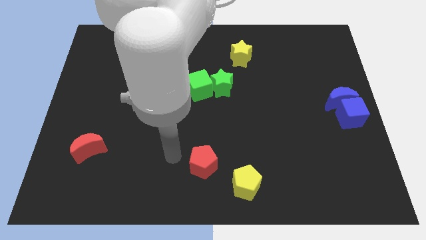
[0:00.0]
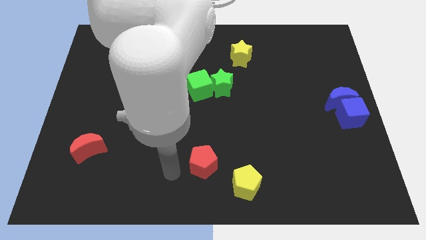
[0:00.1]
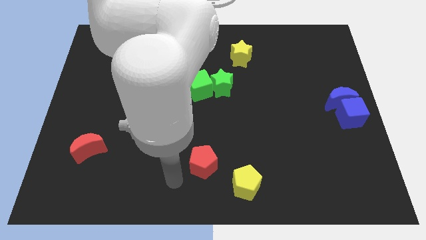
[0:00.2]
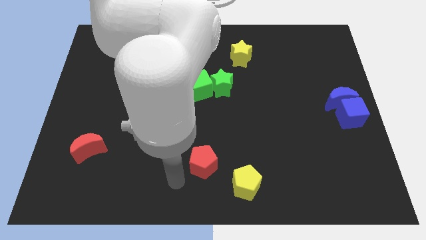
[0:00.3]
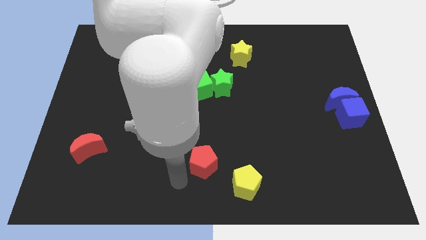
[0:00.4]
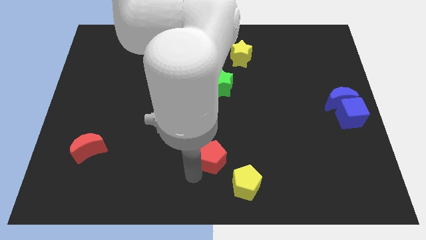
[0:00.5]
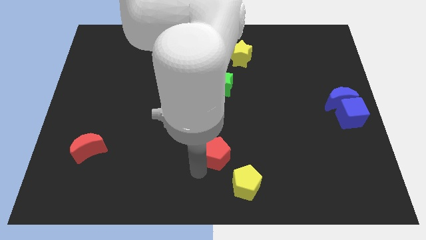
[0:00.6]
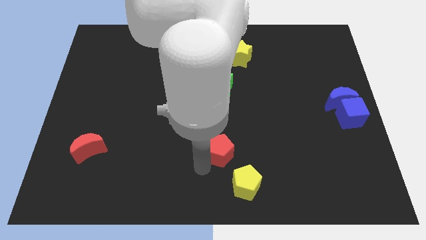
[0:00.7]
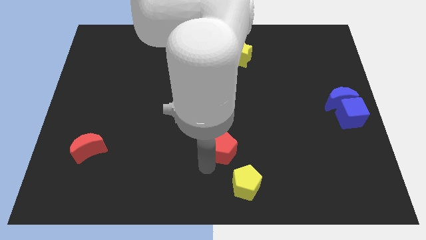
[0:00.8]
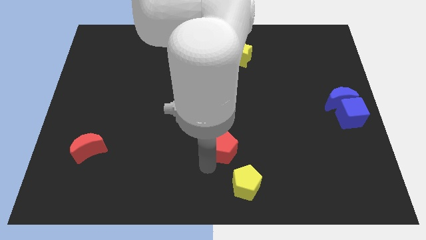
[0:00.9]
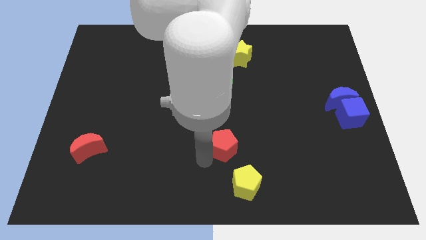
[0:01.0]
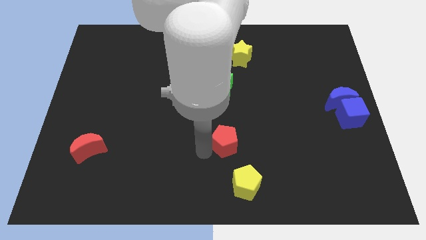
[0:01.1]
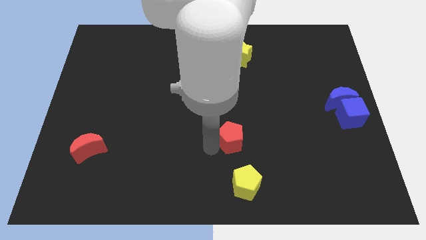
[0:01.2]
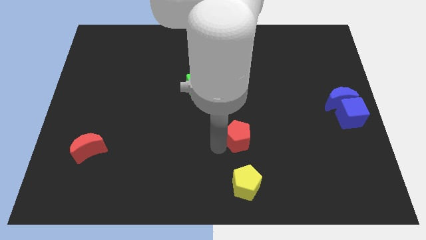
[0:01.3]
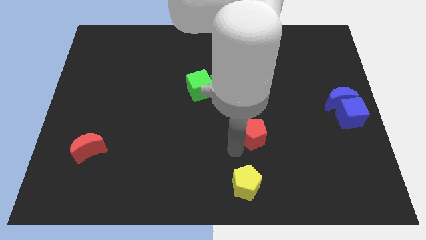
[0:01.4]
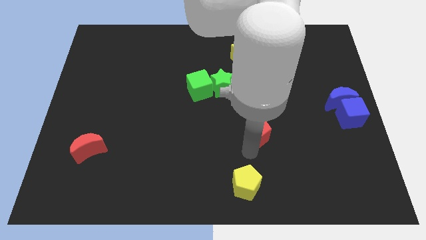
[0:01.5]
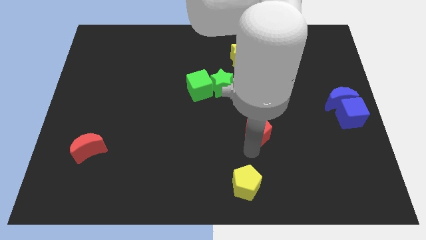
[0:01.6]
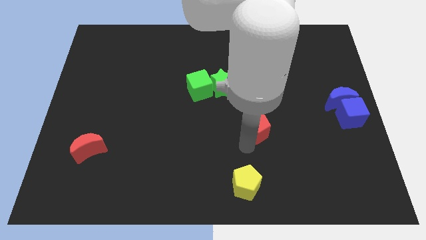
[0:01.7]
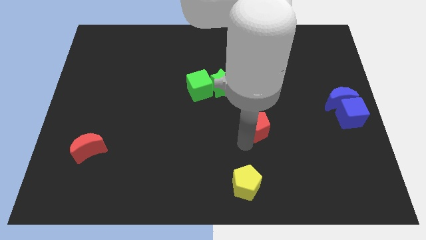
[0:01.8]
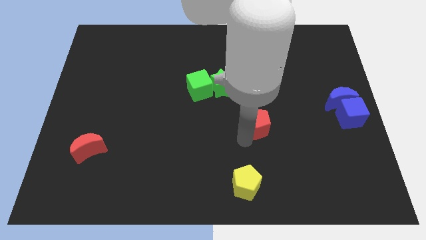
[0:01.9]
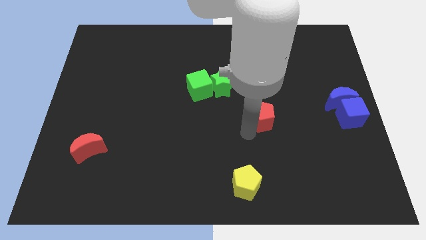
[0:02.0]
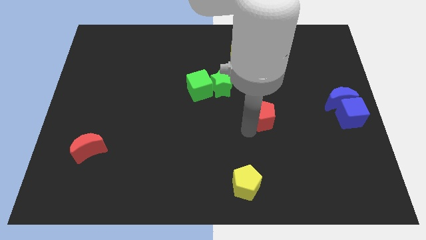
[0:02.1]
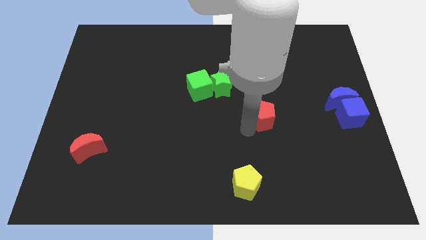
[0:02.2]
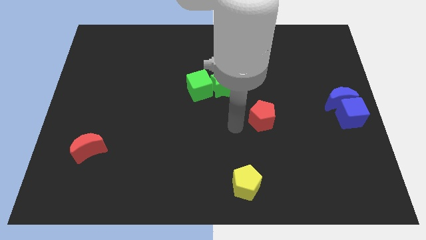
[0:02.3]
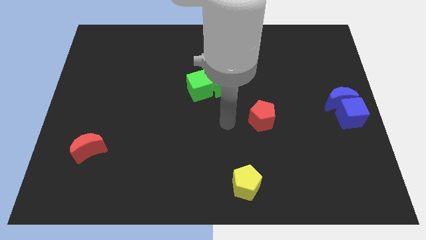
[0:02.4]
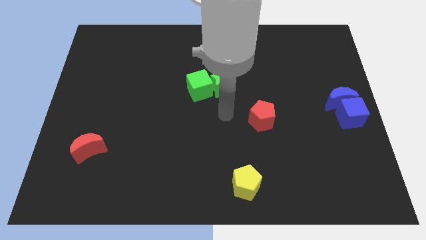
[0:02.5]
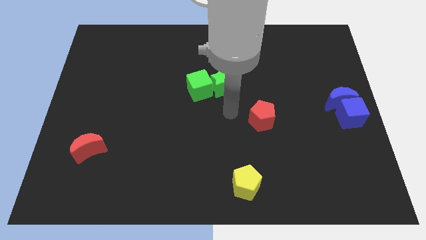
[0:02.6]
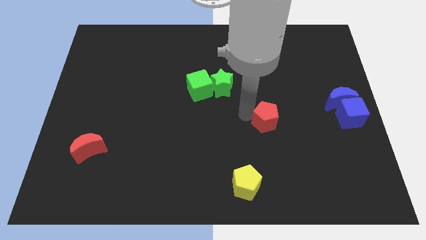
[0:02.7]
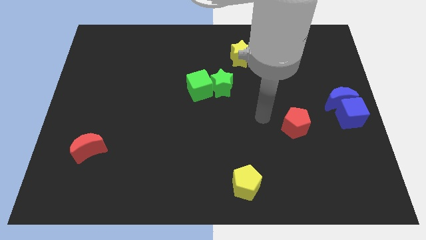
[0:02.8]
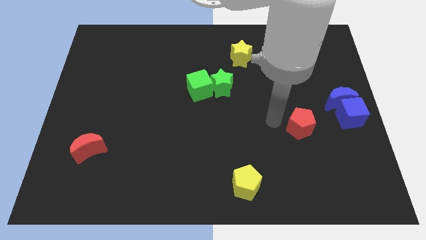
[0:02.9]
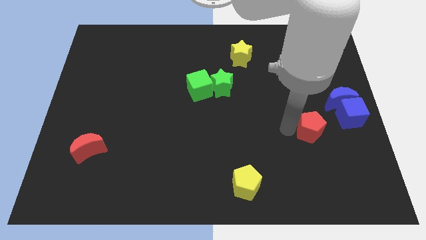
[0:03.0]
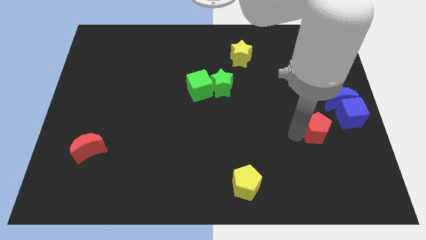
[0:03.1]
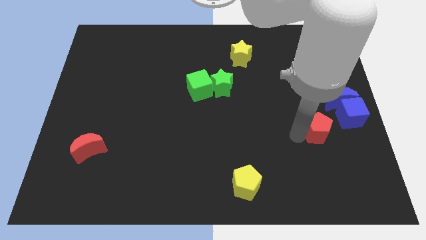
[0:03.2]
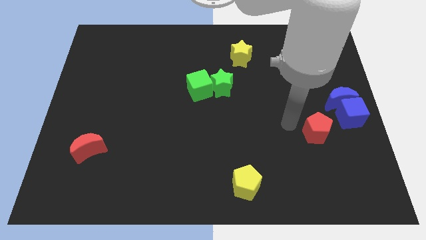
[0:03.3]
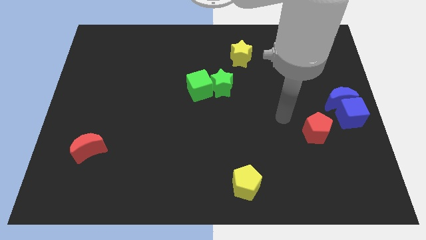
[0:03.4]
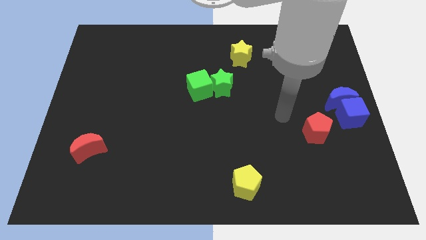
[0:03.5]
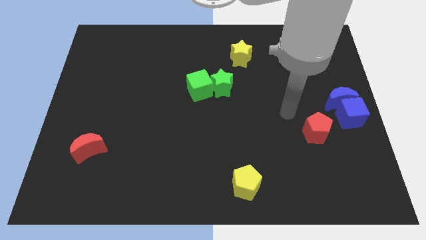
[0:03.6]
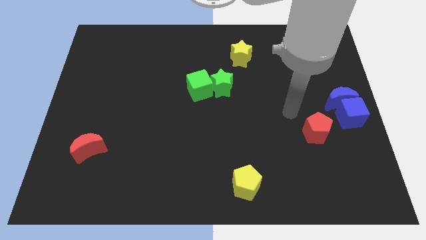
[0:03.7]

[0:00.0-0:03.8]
put the red pentagon diagonally in between the blue cube and yellow pentagon

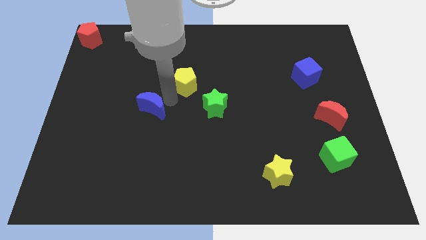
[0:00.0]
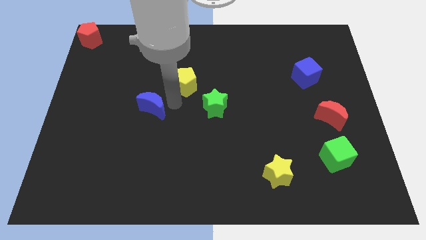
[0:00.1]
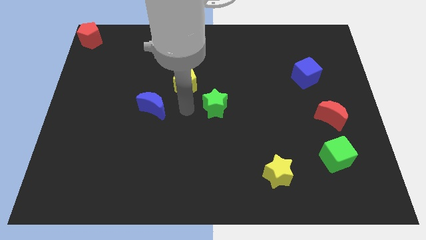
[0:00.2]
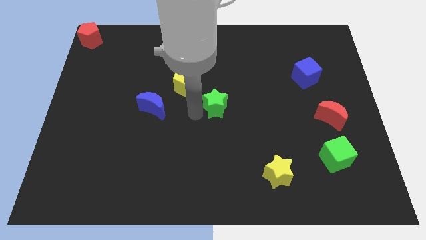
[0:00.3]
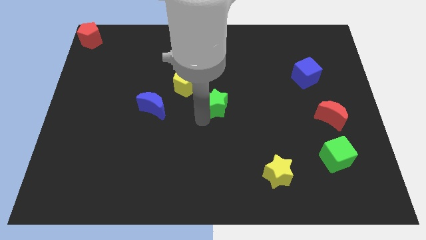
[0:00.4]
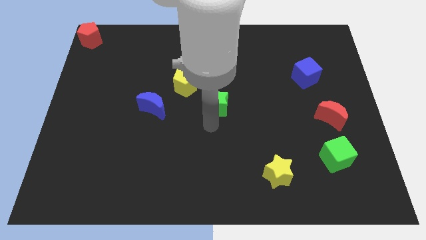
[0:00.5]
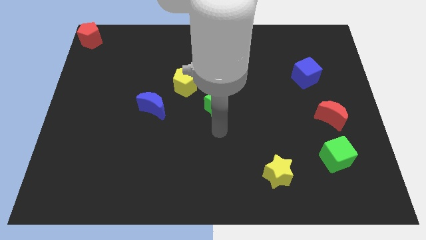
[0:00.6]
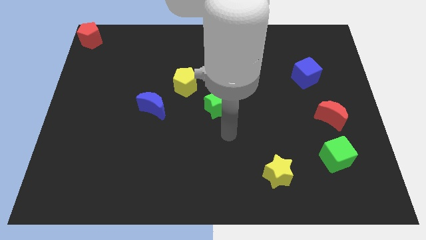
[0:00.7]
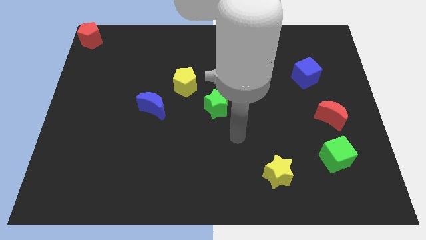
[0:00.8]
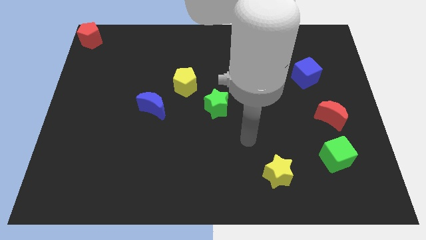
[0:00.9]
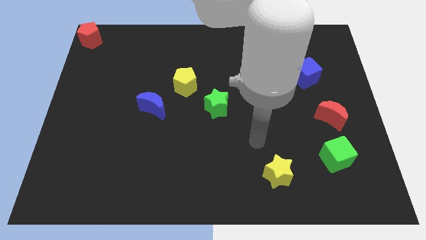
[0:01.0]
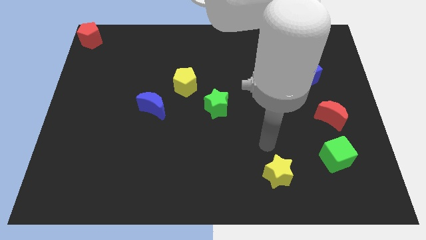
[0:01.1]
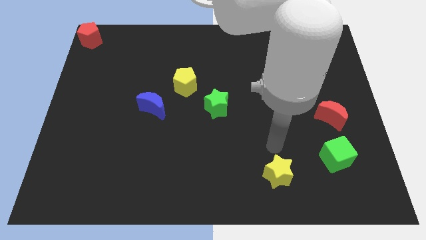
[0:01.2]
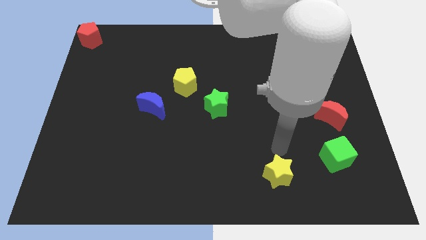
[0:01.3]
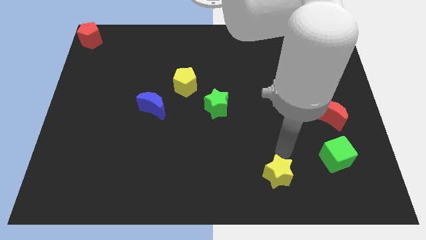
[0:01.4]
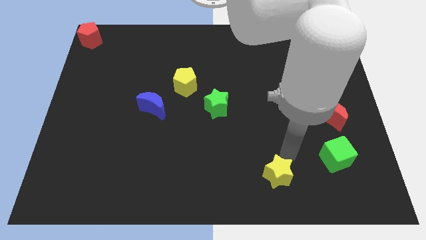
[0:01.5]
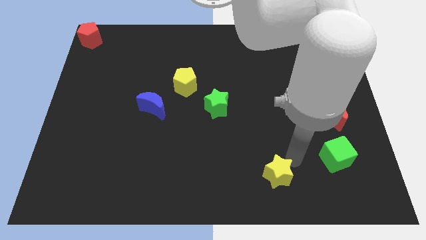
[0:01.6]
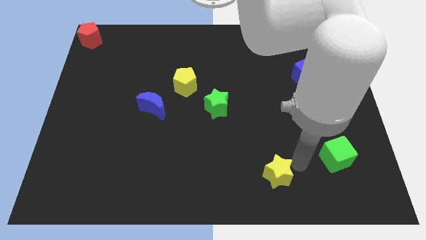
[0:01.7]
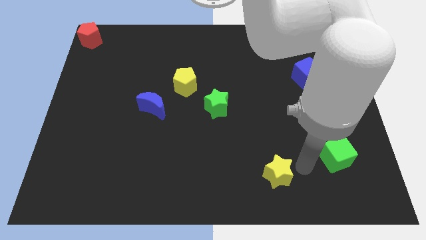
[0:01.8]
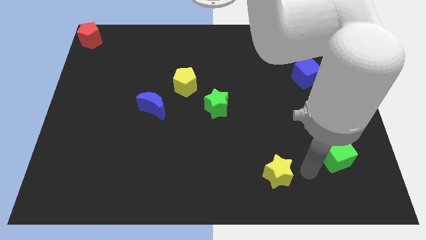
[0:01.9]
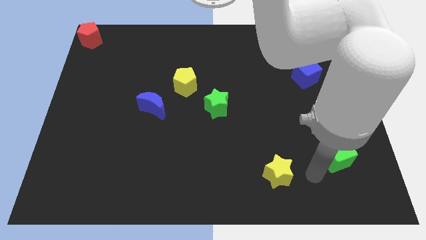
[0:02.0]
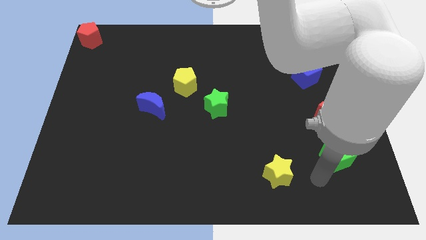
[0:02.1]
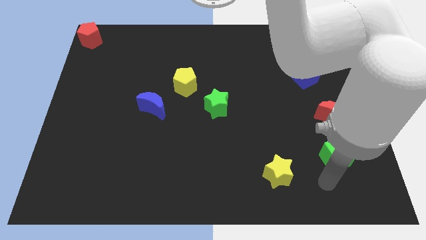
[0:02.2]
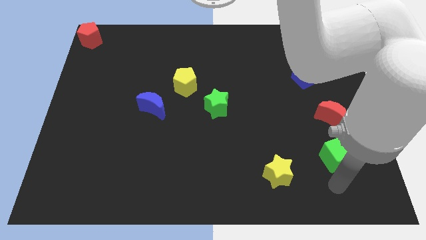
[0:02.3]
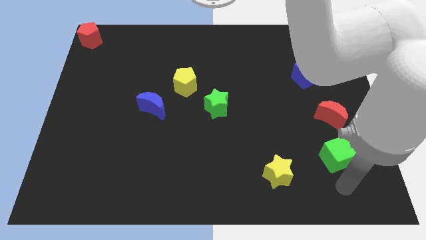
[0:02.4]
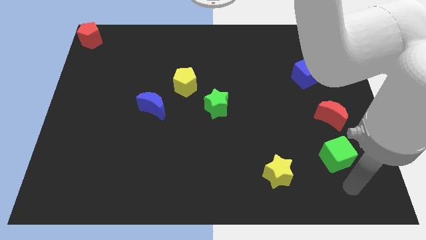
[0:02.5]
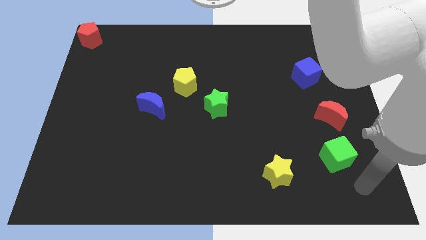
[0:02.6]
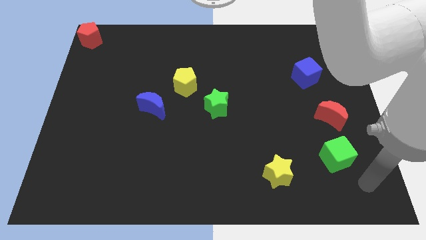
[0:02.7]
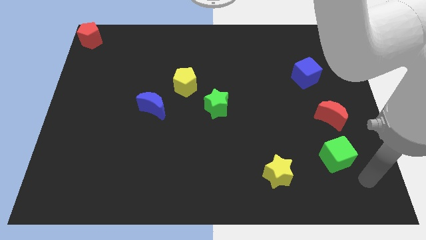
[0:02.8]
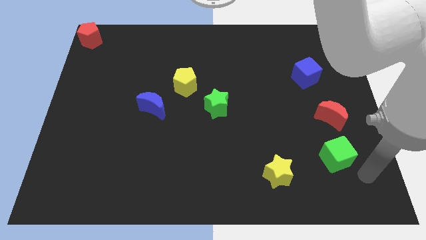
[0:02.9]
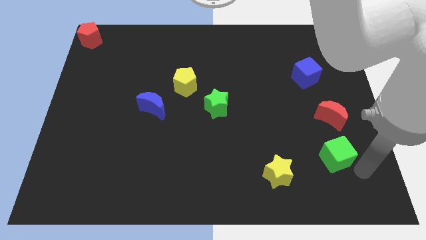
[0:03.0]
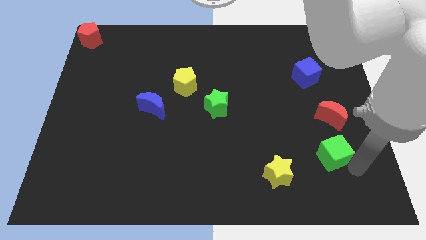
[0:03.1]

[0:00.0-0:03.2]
move your arm to the bottom side of the green cube

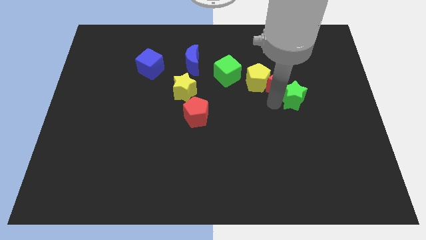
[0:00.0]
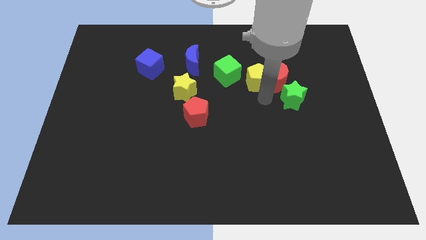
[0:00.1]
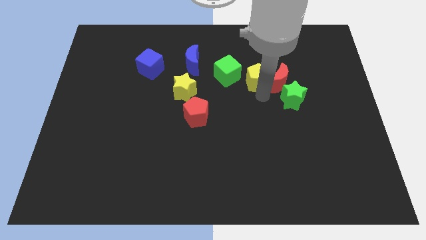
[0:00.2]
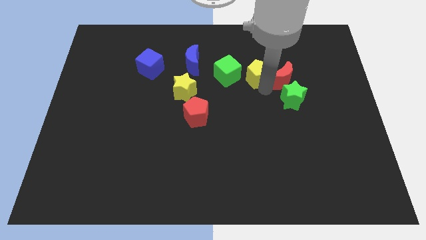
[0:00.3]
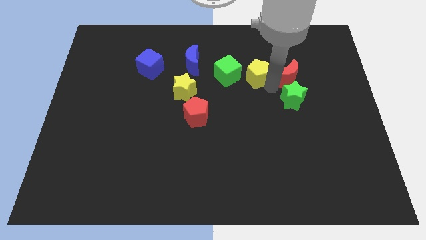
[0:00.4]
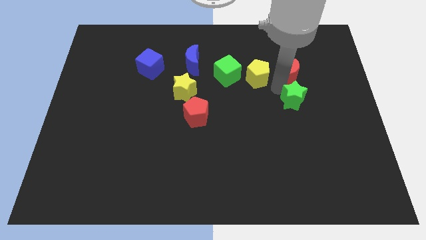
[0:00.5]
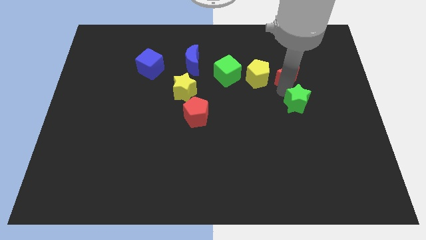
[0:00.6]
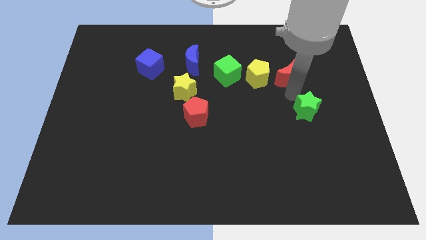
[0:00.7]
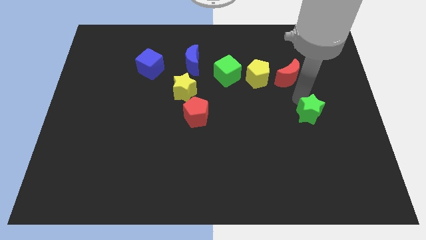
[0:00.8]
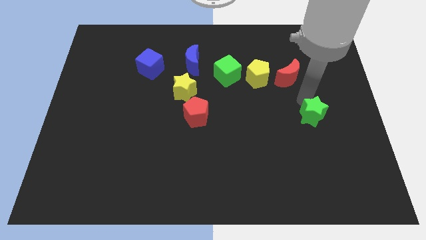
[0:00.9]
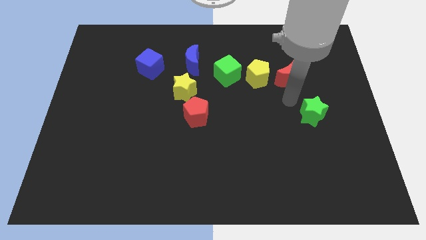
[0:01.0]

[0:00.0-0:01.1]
separate the green star from the red moon

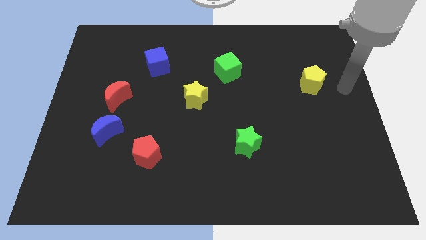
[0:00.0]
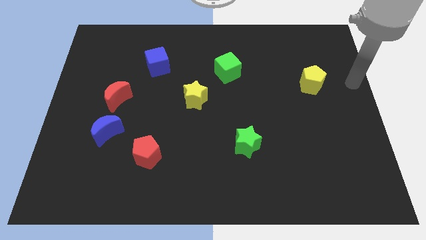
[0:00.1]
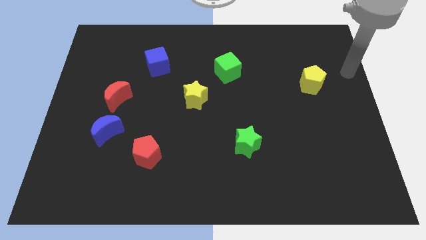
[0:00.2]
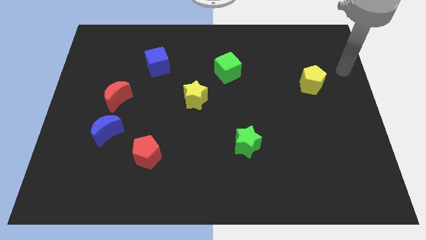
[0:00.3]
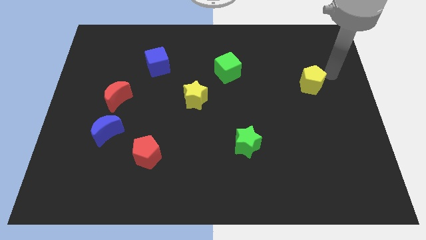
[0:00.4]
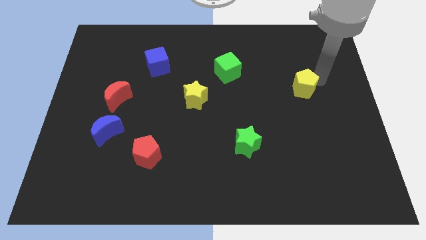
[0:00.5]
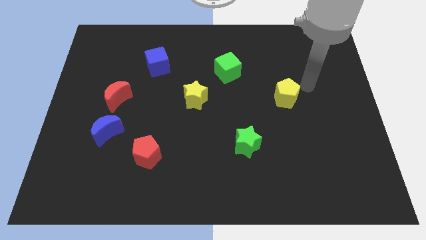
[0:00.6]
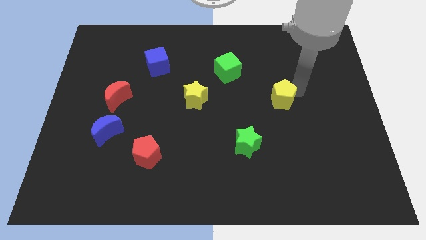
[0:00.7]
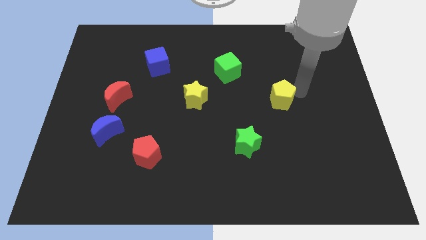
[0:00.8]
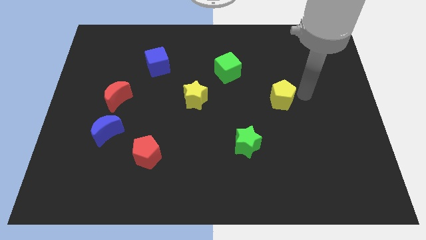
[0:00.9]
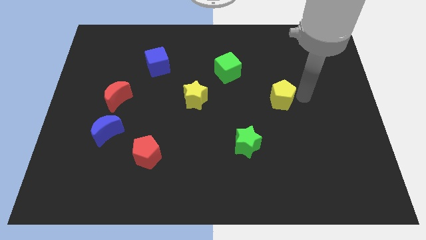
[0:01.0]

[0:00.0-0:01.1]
move the yellow pentagon diagonally right of the green cube
